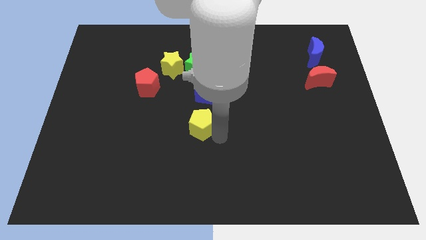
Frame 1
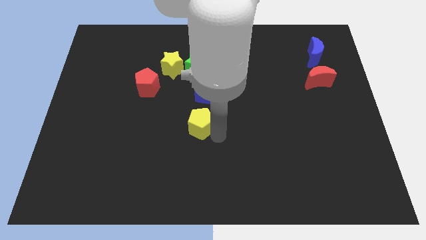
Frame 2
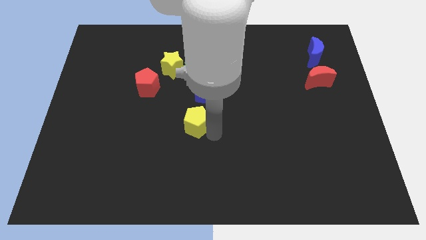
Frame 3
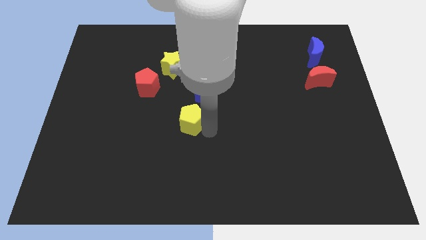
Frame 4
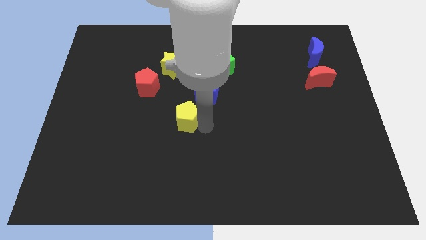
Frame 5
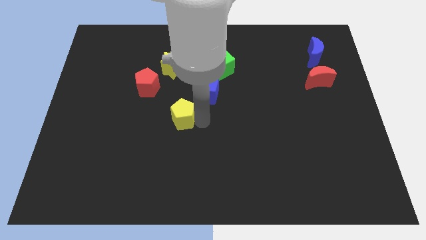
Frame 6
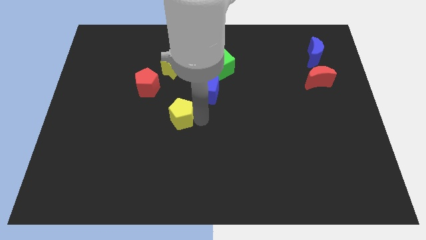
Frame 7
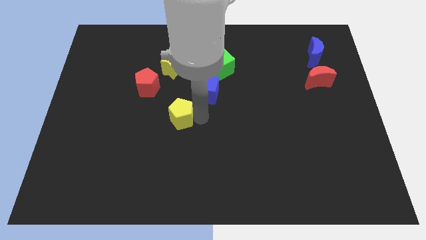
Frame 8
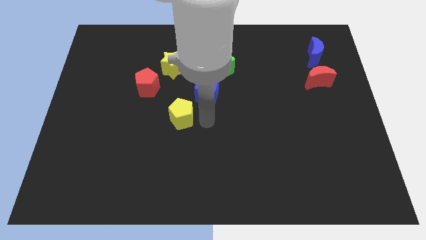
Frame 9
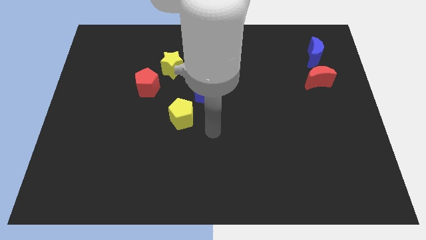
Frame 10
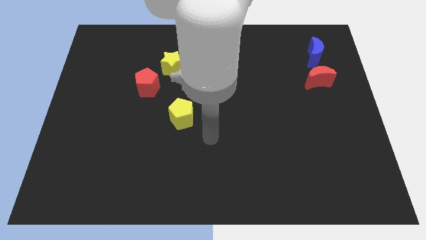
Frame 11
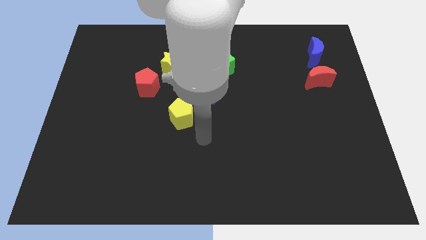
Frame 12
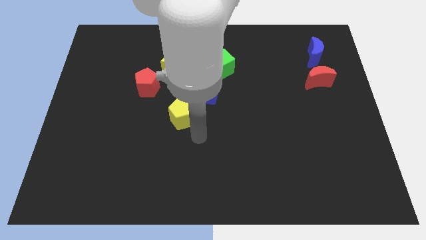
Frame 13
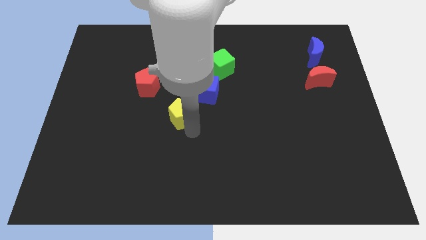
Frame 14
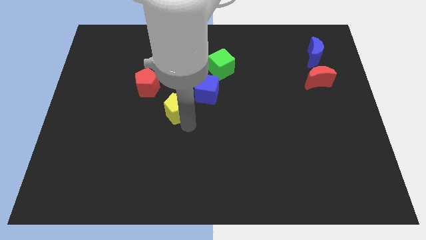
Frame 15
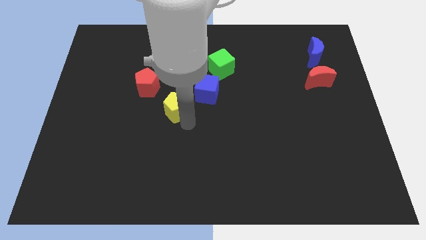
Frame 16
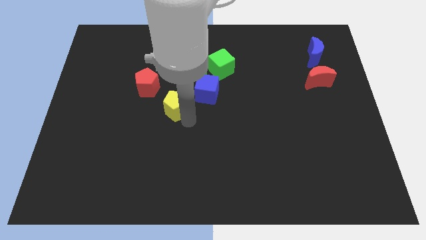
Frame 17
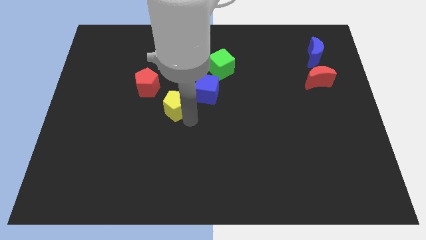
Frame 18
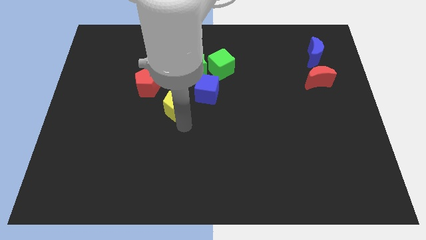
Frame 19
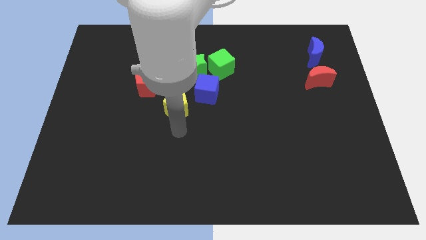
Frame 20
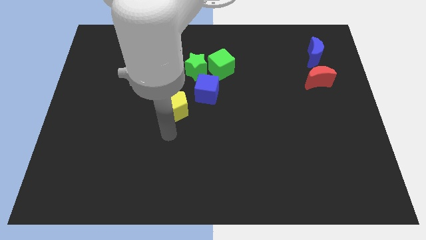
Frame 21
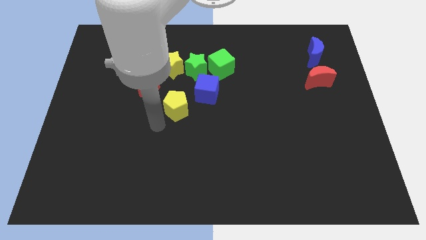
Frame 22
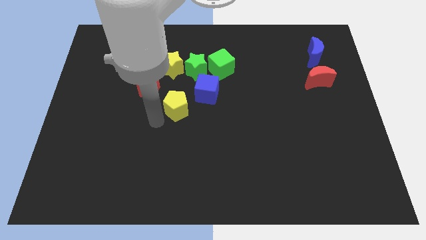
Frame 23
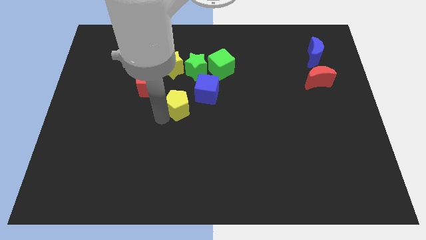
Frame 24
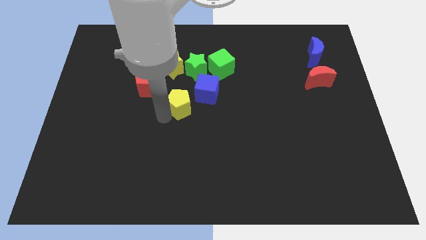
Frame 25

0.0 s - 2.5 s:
move the yellow pentagon to the bottom left of the blue cube

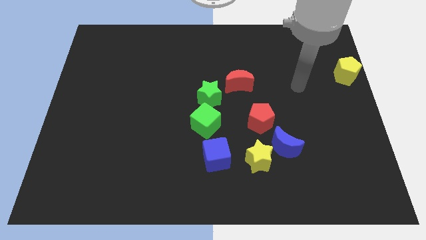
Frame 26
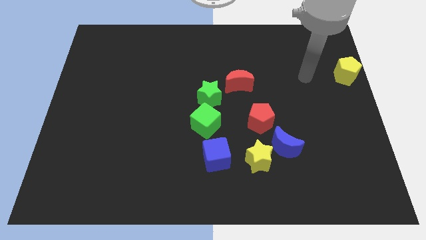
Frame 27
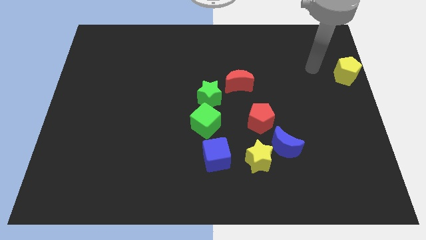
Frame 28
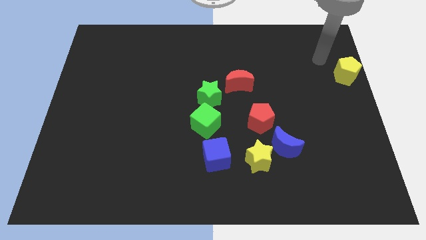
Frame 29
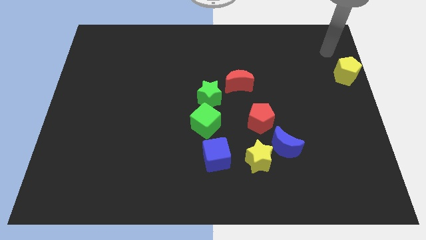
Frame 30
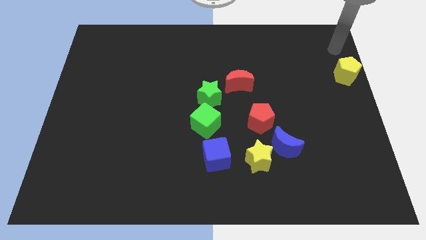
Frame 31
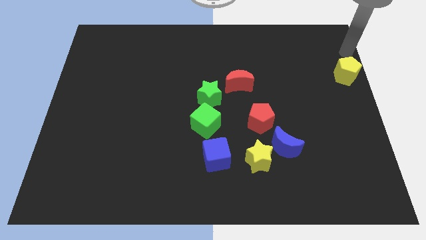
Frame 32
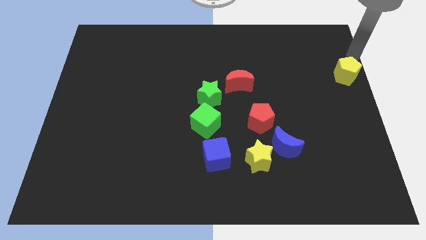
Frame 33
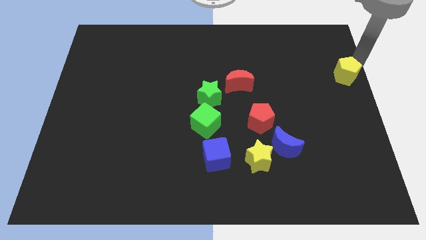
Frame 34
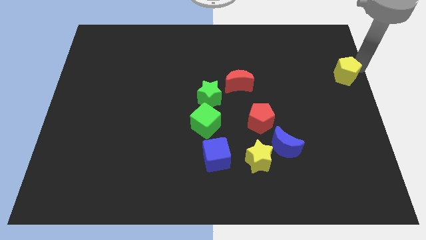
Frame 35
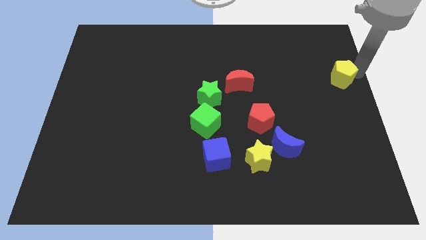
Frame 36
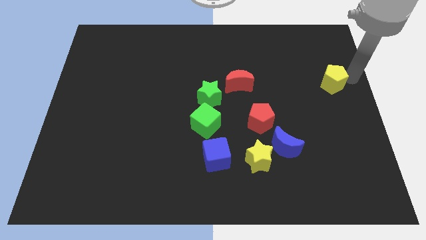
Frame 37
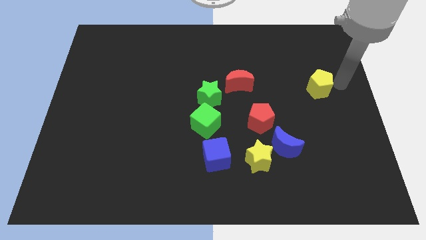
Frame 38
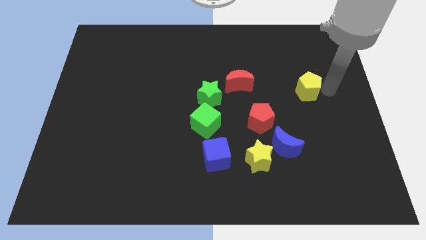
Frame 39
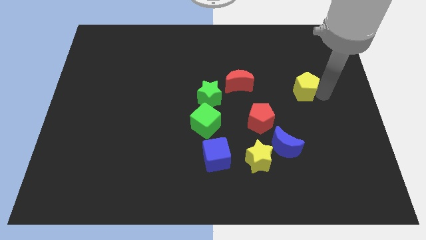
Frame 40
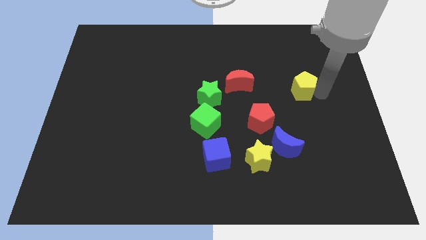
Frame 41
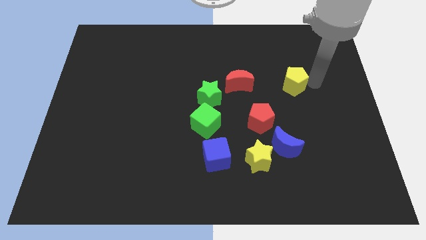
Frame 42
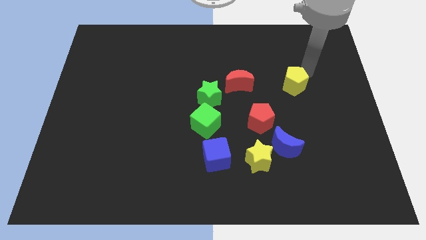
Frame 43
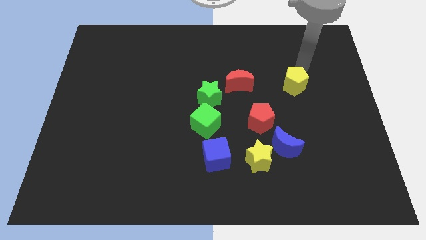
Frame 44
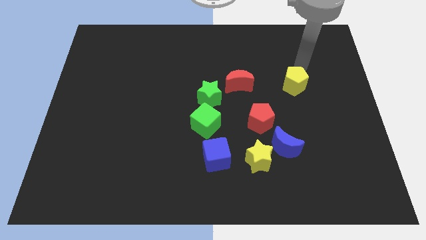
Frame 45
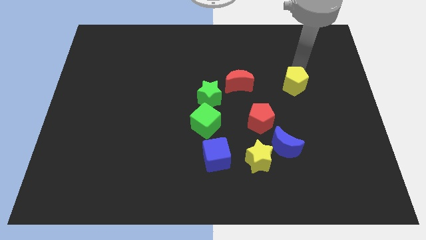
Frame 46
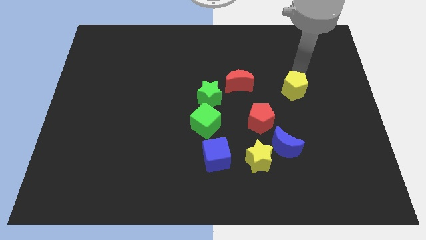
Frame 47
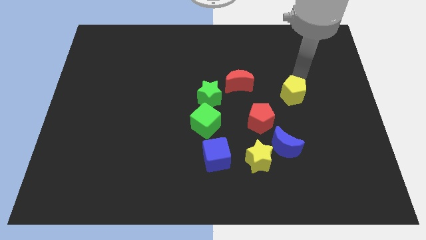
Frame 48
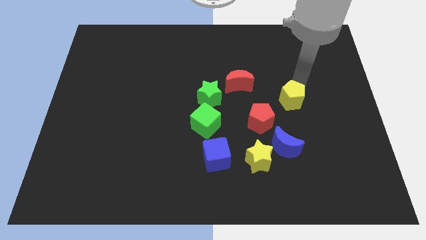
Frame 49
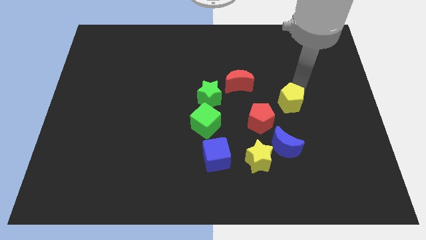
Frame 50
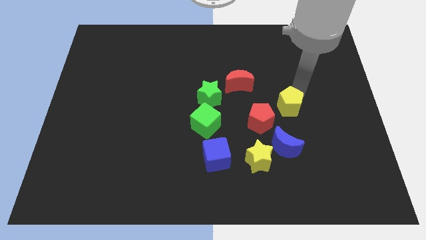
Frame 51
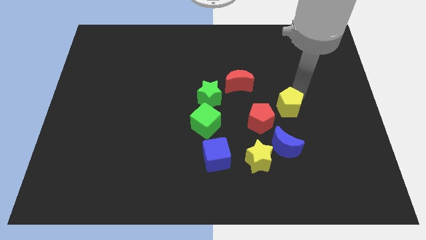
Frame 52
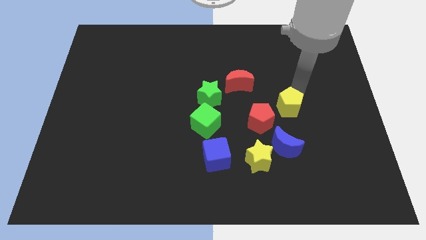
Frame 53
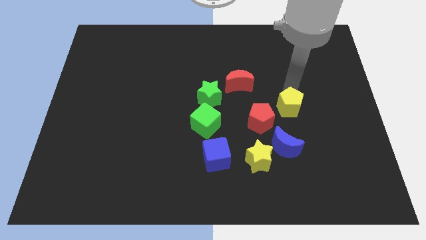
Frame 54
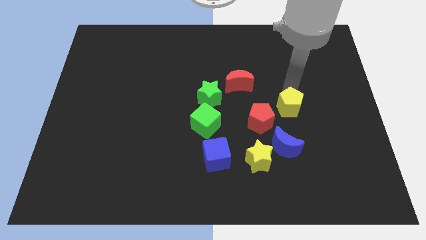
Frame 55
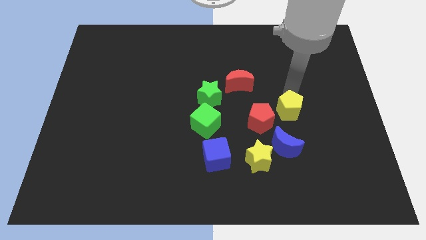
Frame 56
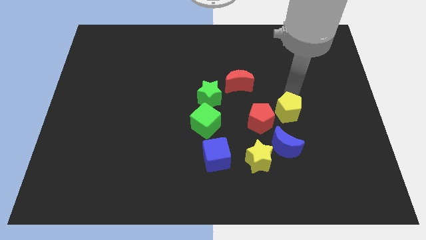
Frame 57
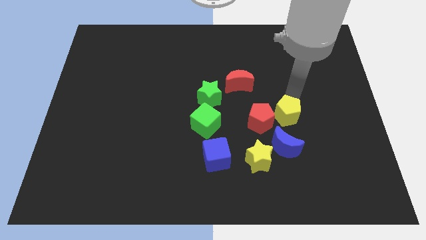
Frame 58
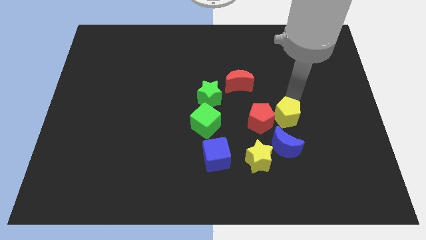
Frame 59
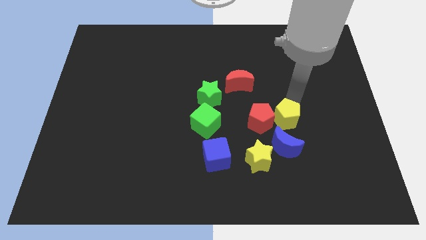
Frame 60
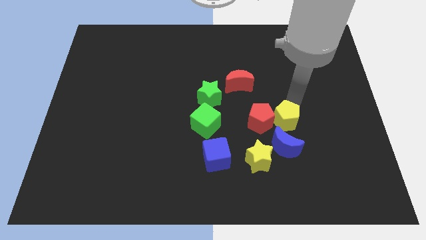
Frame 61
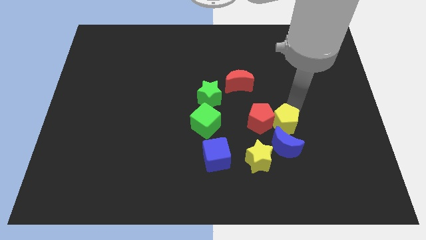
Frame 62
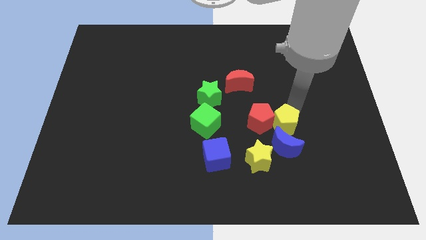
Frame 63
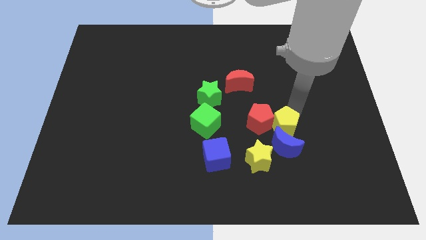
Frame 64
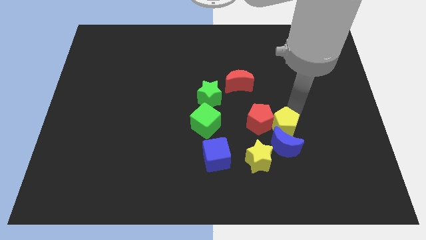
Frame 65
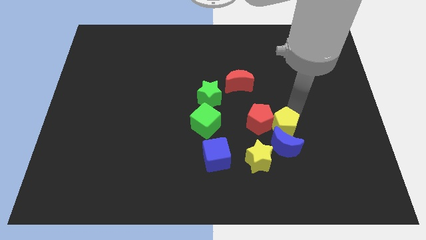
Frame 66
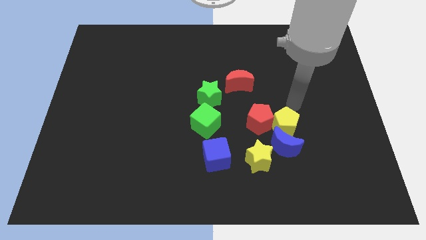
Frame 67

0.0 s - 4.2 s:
place the yellow pentagon to the right of red pentagon

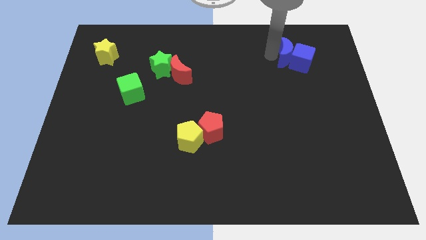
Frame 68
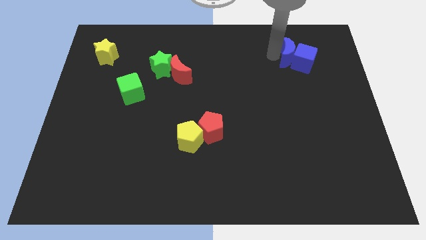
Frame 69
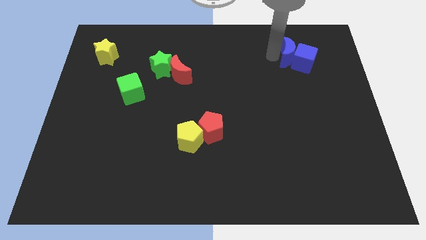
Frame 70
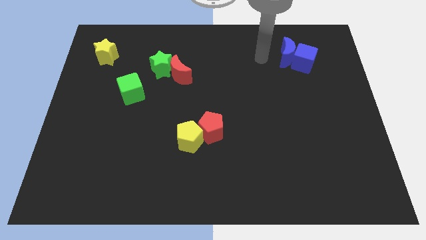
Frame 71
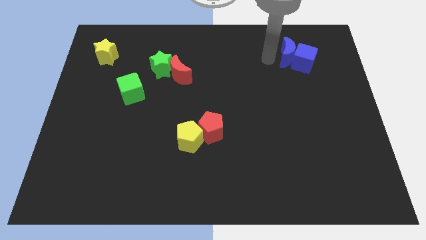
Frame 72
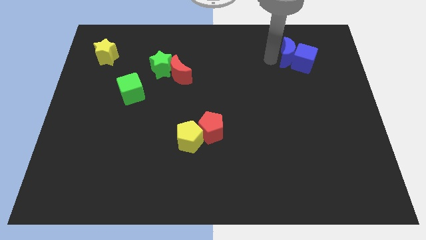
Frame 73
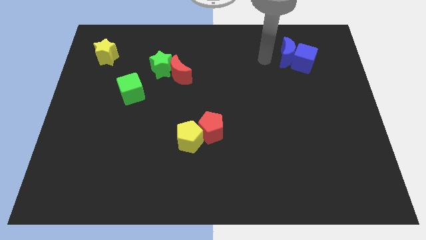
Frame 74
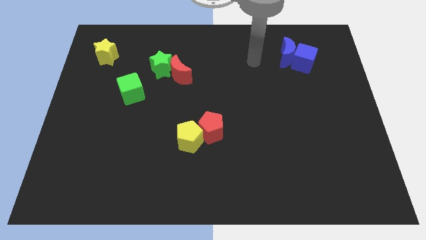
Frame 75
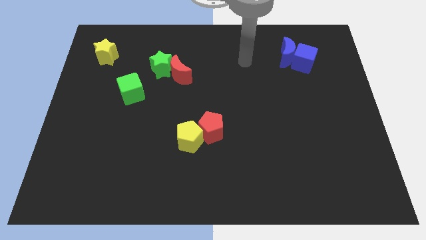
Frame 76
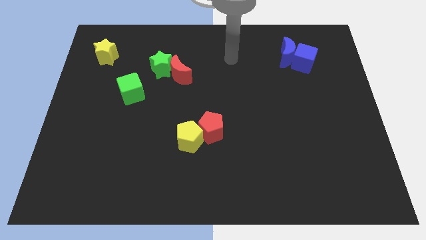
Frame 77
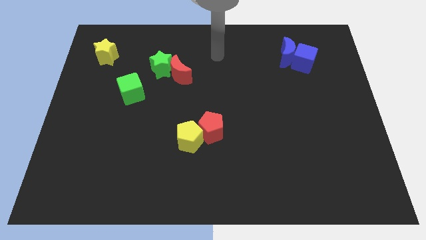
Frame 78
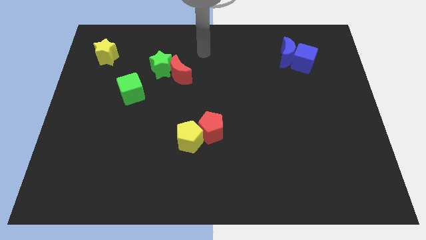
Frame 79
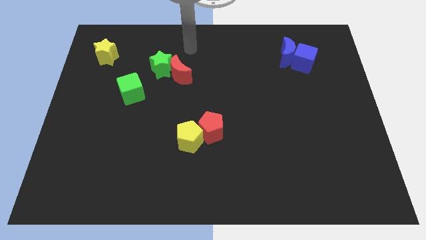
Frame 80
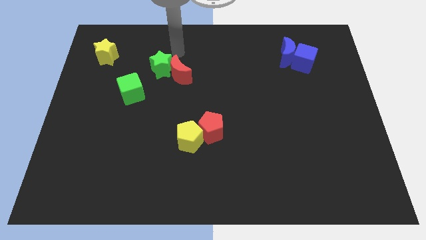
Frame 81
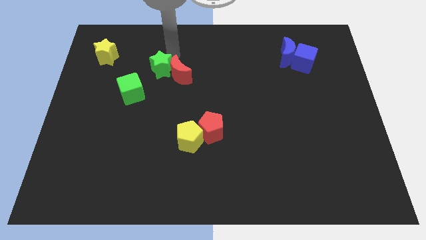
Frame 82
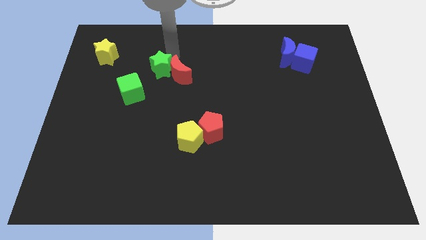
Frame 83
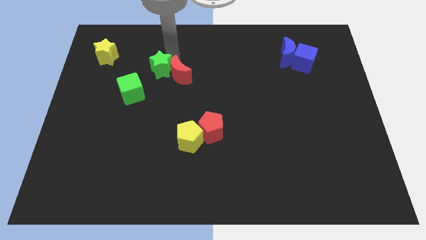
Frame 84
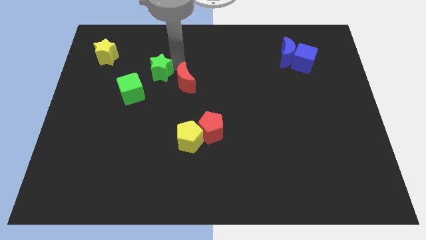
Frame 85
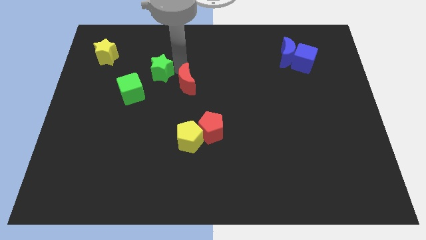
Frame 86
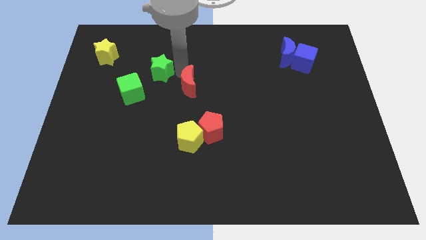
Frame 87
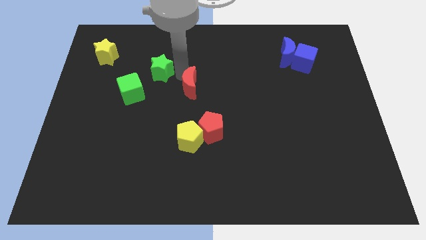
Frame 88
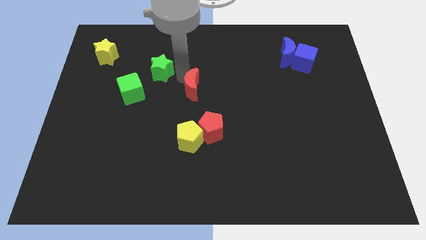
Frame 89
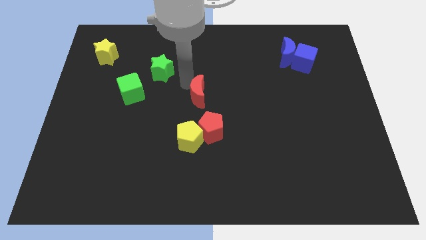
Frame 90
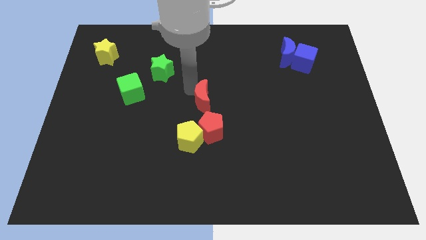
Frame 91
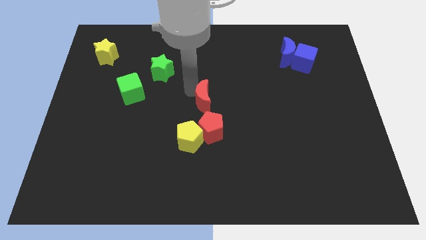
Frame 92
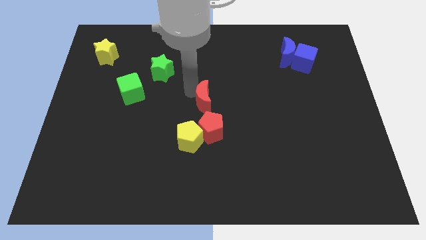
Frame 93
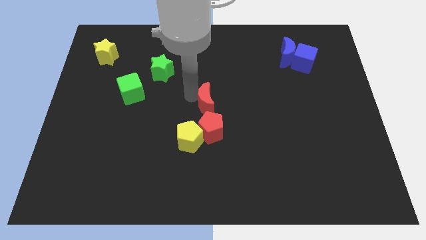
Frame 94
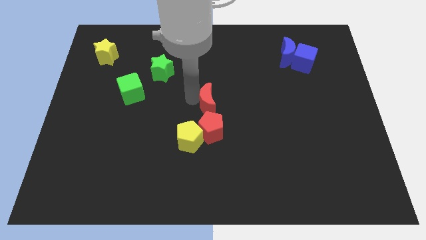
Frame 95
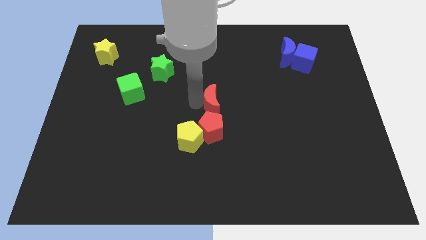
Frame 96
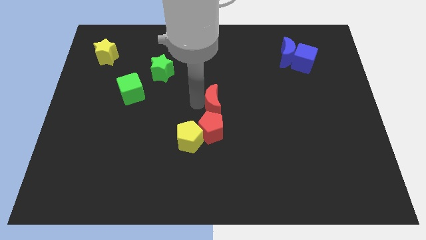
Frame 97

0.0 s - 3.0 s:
place the red moon above the red pentagon
